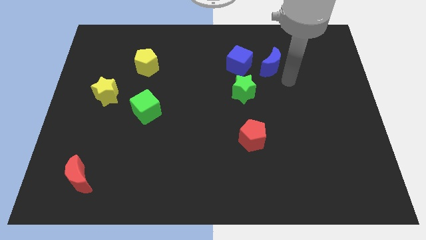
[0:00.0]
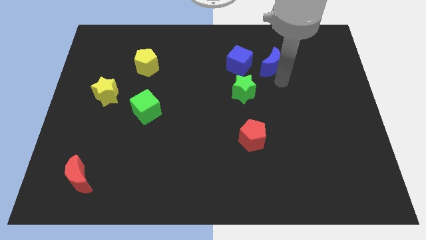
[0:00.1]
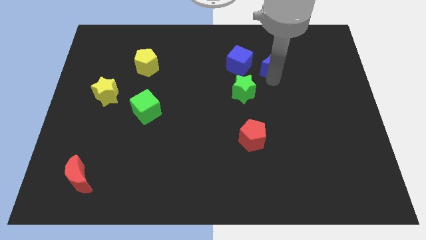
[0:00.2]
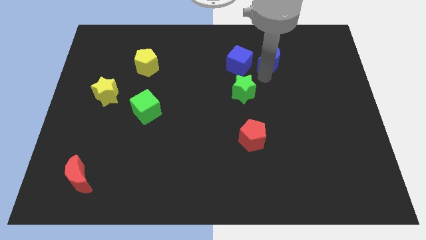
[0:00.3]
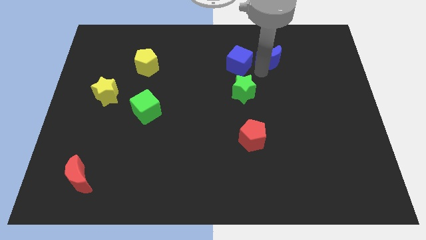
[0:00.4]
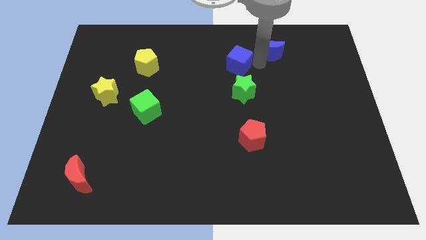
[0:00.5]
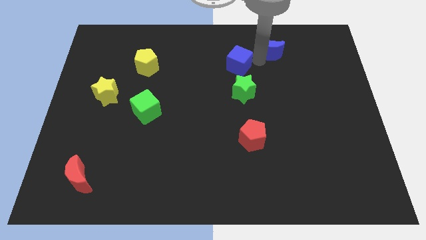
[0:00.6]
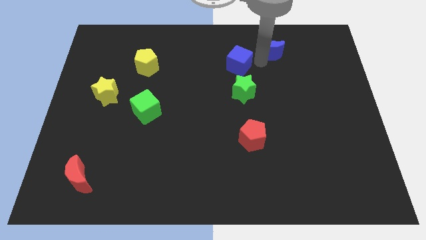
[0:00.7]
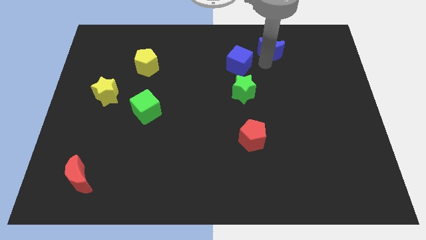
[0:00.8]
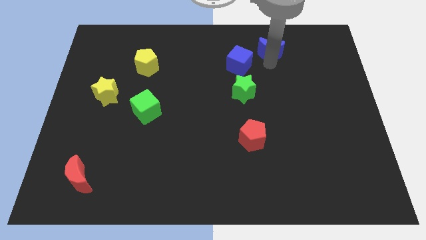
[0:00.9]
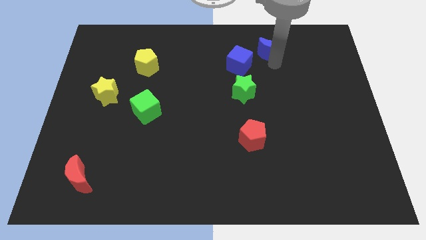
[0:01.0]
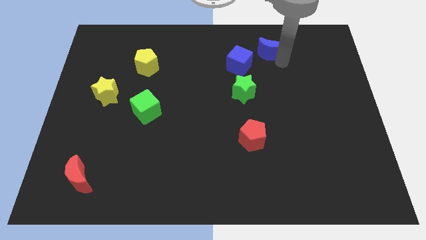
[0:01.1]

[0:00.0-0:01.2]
push the blue moon towards the top side of the board

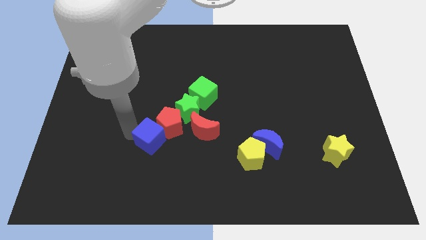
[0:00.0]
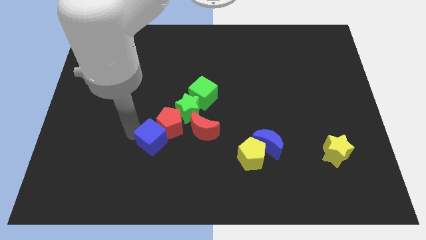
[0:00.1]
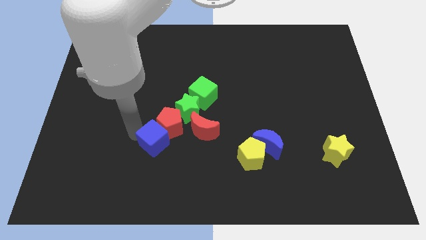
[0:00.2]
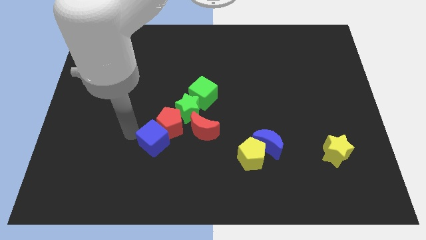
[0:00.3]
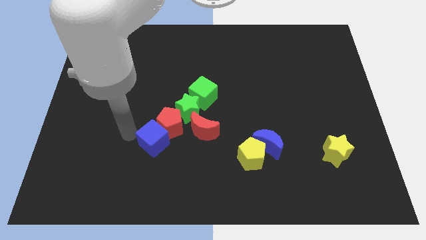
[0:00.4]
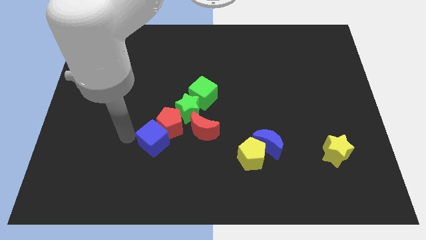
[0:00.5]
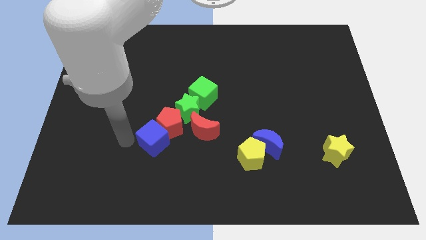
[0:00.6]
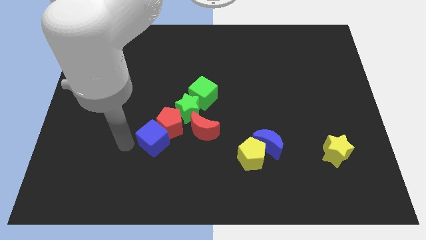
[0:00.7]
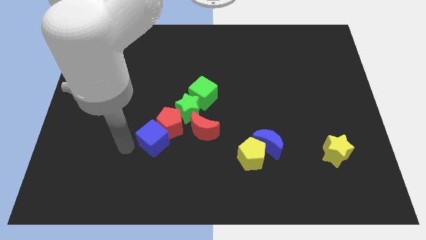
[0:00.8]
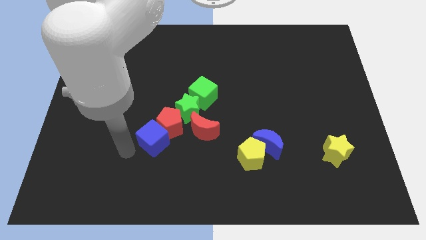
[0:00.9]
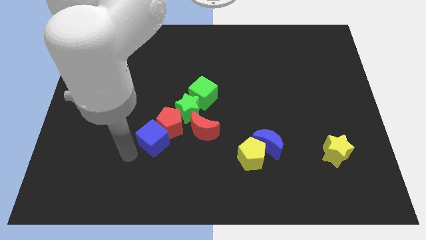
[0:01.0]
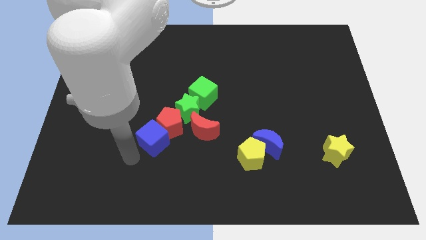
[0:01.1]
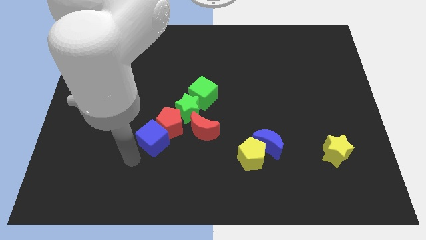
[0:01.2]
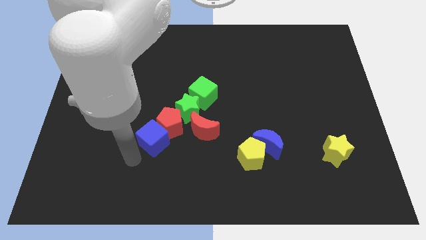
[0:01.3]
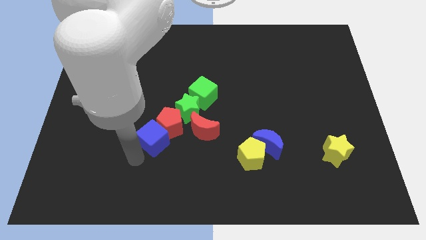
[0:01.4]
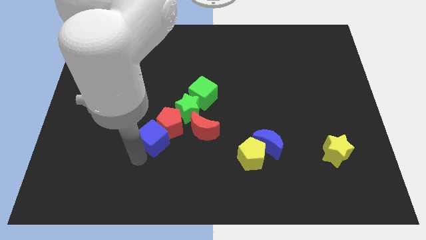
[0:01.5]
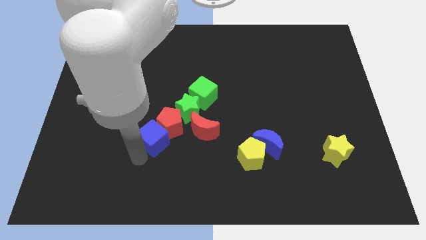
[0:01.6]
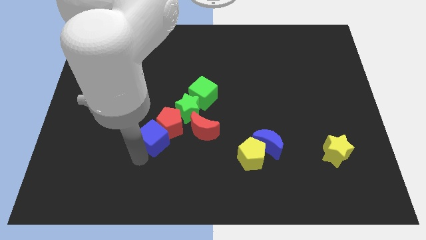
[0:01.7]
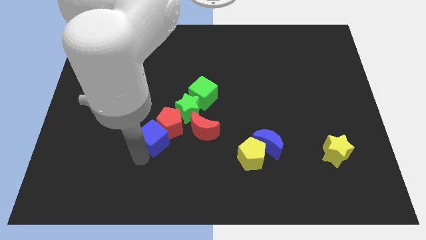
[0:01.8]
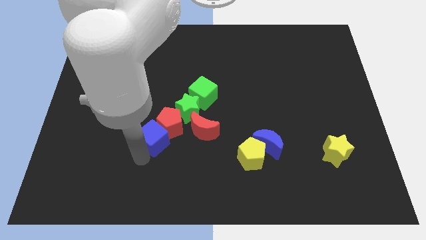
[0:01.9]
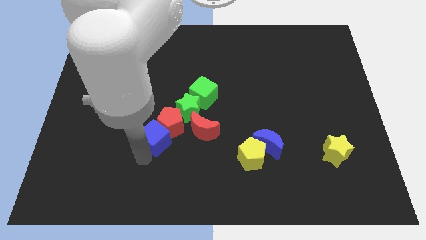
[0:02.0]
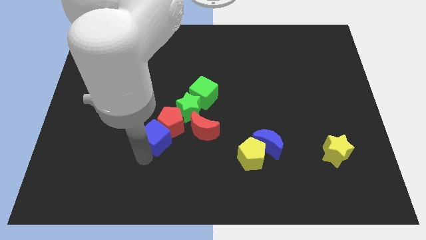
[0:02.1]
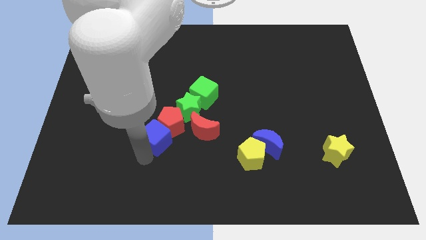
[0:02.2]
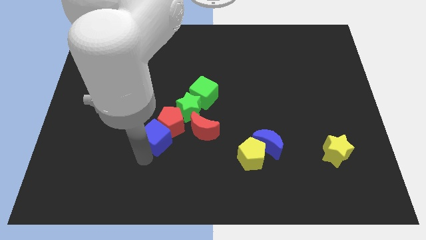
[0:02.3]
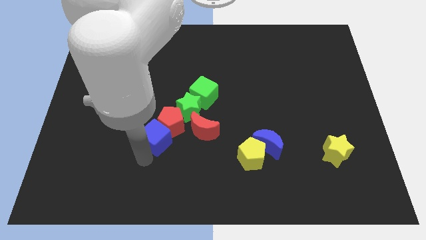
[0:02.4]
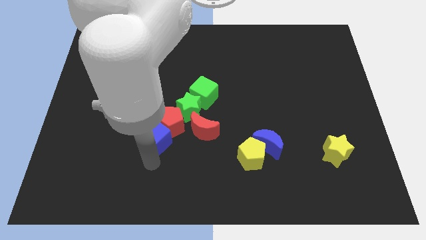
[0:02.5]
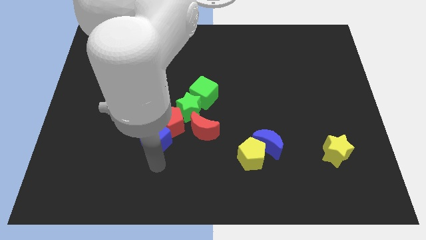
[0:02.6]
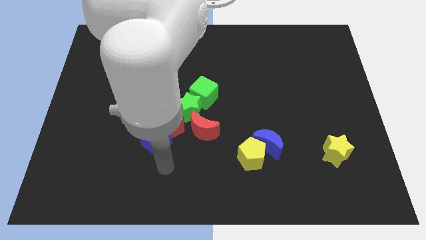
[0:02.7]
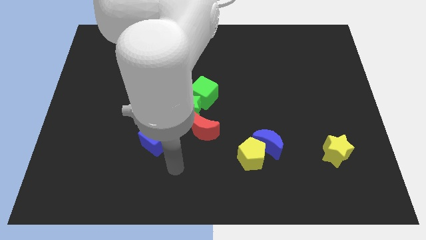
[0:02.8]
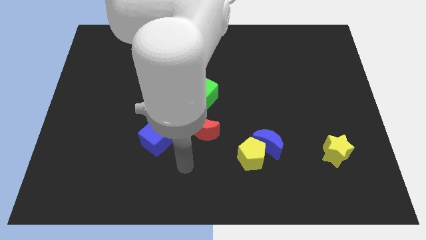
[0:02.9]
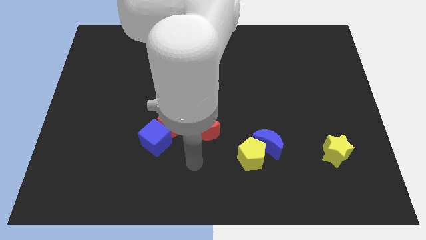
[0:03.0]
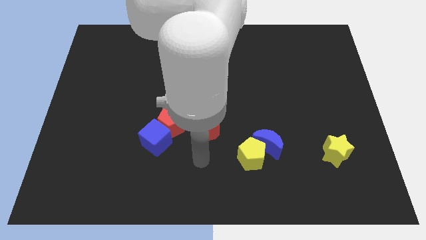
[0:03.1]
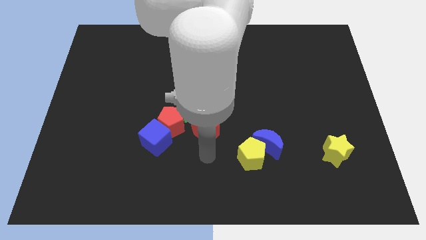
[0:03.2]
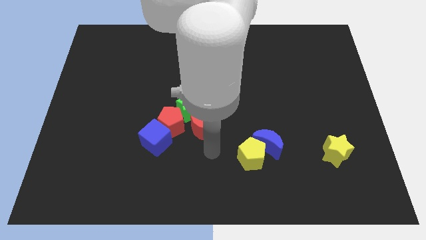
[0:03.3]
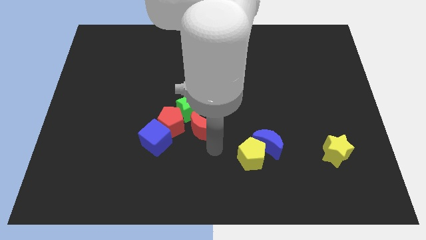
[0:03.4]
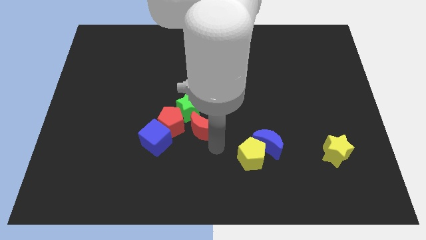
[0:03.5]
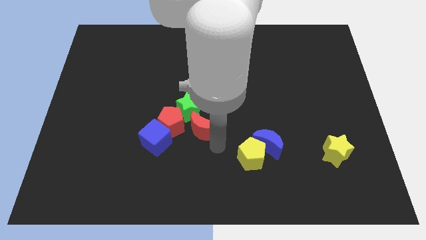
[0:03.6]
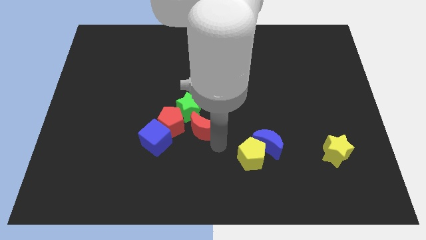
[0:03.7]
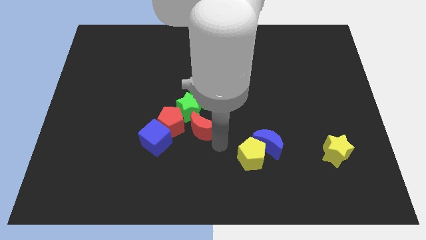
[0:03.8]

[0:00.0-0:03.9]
adjust the group of blocks towards the center of the board

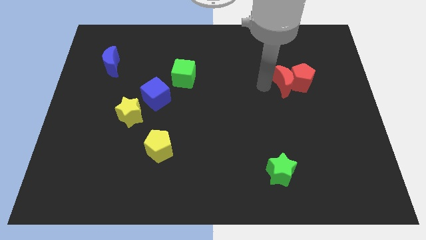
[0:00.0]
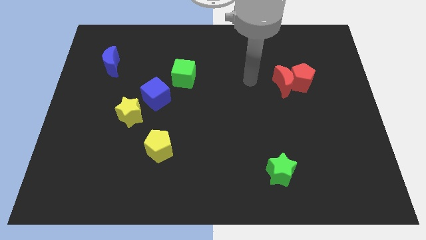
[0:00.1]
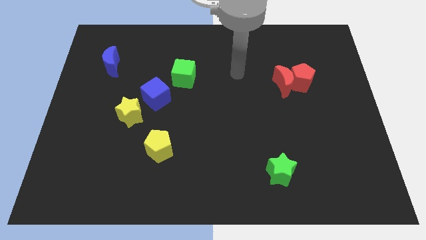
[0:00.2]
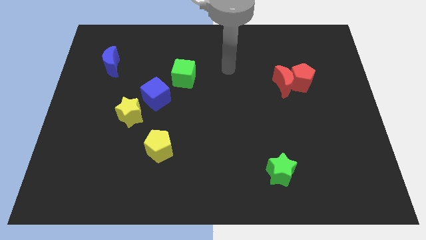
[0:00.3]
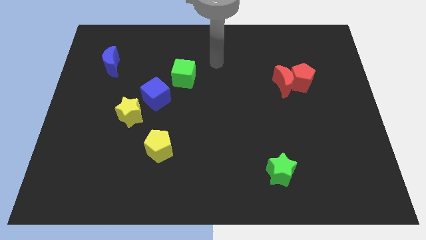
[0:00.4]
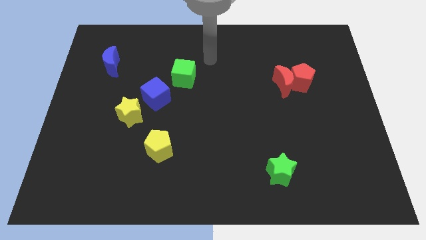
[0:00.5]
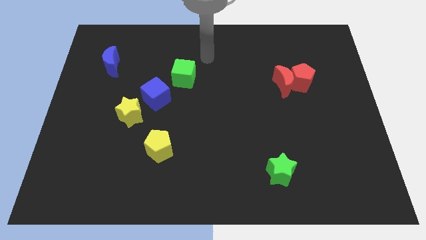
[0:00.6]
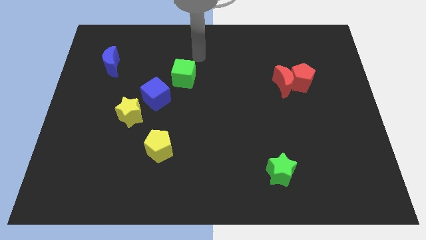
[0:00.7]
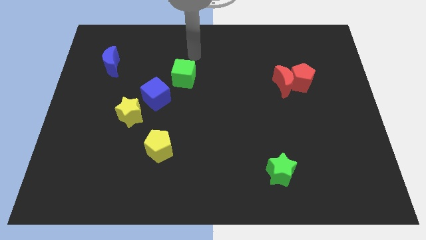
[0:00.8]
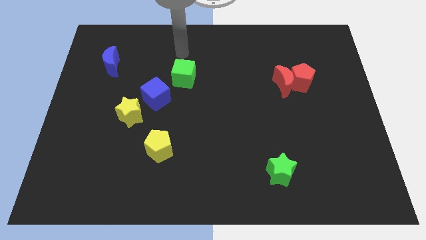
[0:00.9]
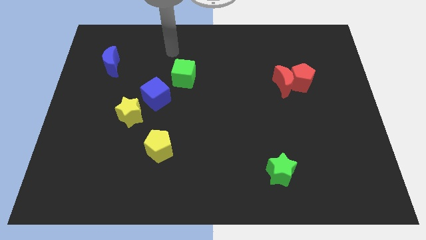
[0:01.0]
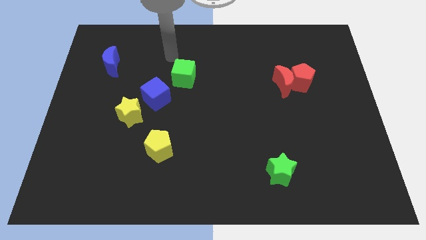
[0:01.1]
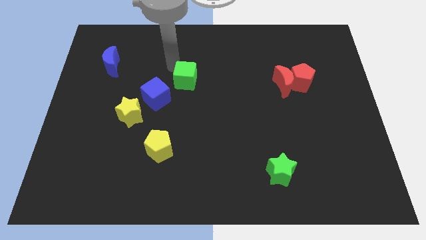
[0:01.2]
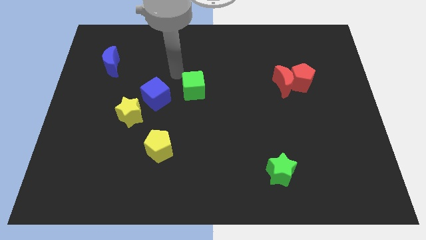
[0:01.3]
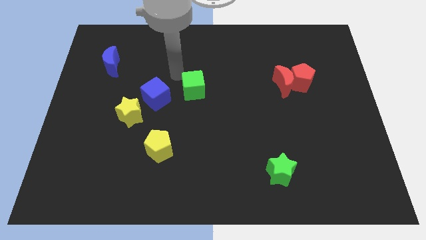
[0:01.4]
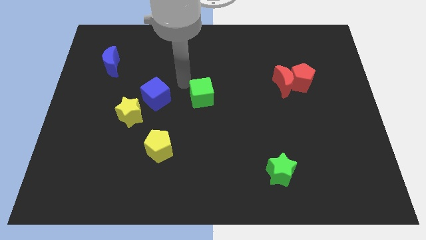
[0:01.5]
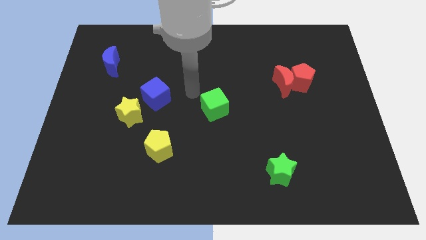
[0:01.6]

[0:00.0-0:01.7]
move the green cube right to the blue cube

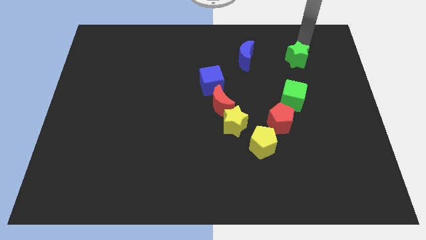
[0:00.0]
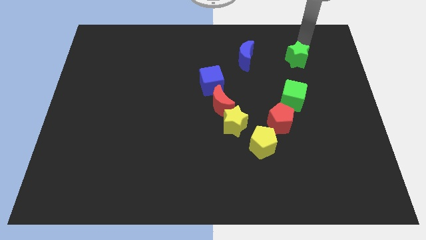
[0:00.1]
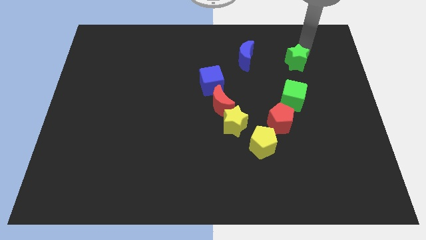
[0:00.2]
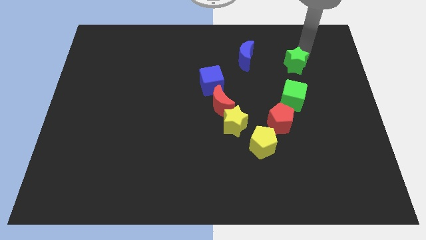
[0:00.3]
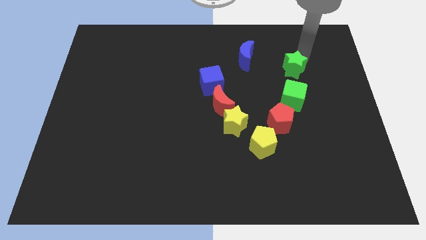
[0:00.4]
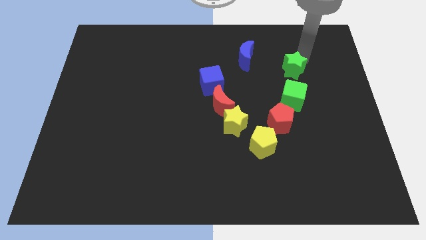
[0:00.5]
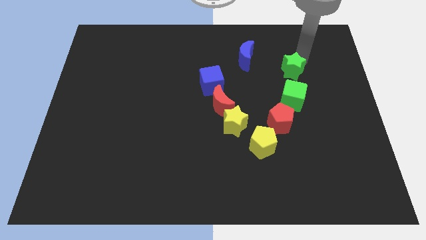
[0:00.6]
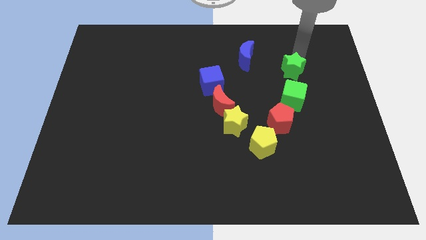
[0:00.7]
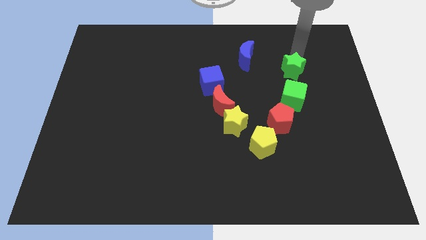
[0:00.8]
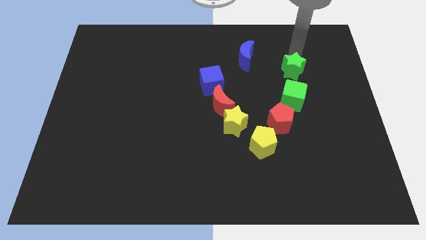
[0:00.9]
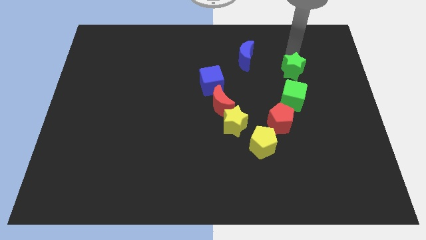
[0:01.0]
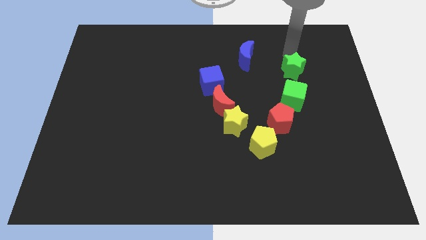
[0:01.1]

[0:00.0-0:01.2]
move the green star above the green cube

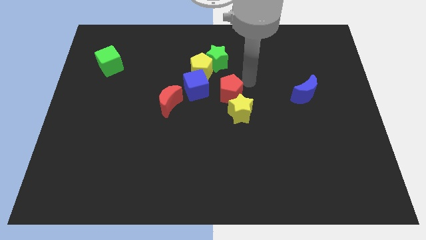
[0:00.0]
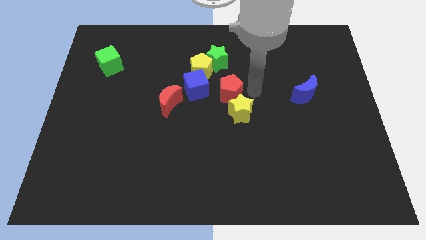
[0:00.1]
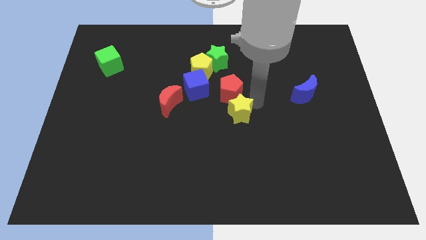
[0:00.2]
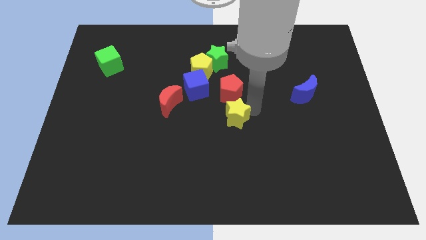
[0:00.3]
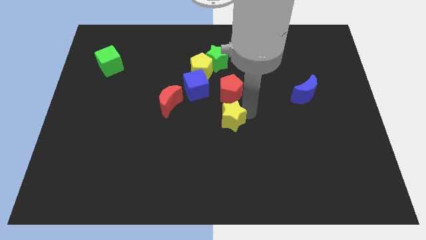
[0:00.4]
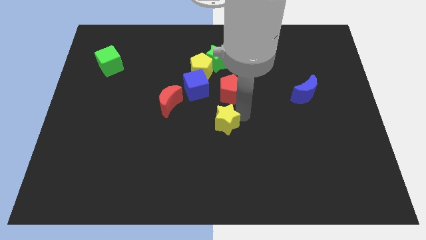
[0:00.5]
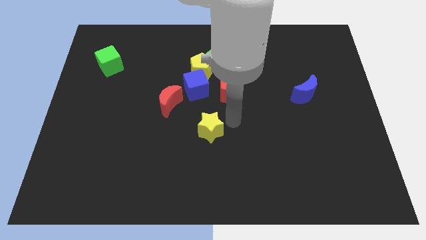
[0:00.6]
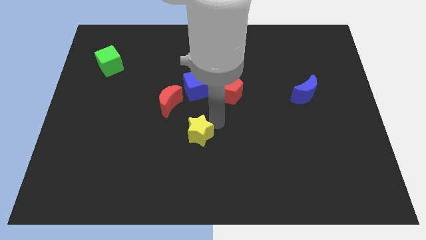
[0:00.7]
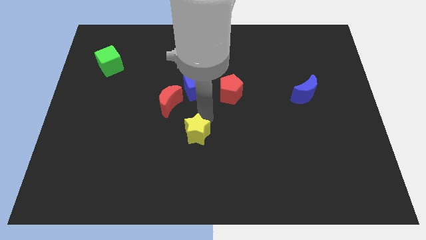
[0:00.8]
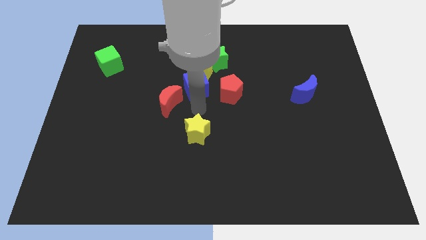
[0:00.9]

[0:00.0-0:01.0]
move the yellow star to the bottom of the blue cube
